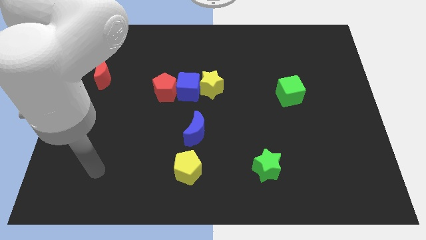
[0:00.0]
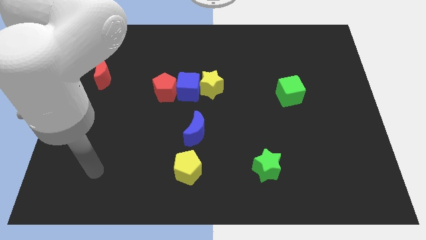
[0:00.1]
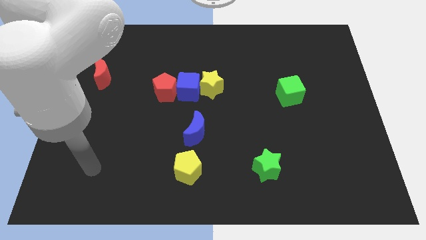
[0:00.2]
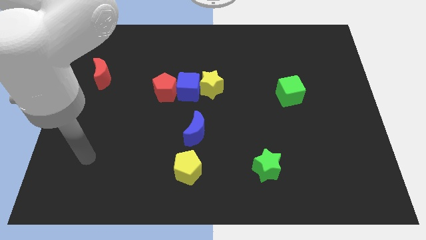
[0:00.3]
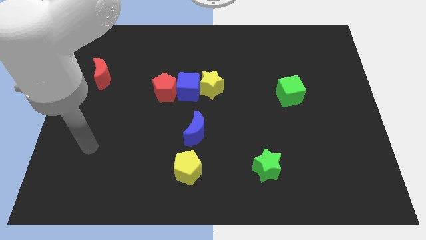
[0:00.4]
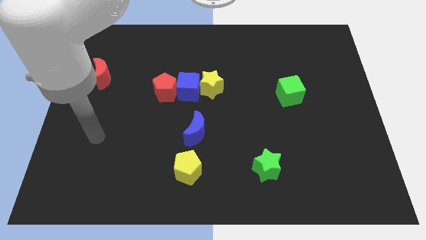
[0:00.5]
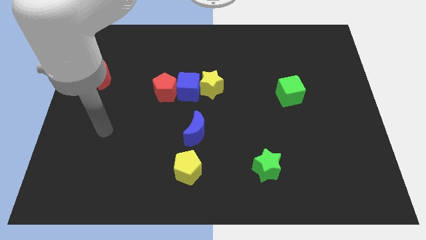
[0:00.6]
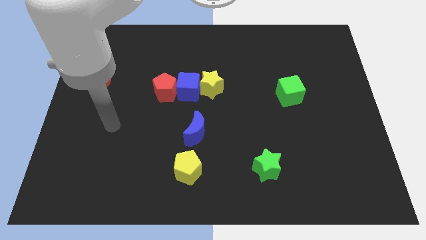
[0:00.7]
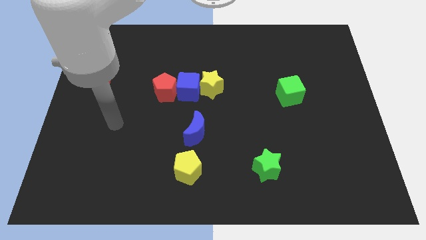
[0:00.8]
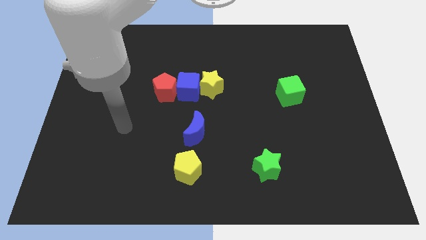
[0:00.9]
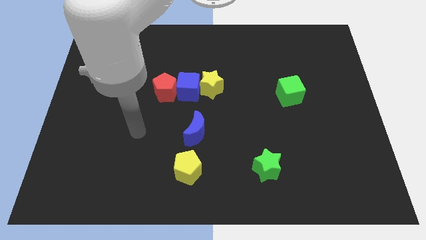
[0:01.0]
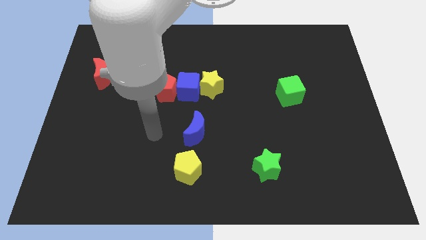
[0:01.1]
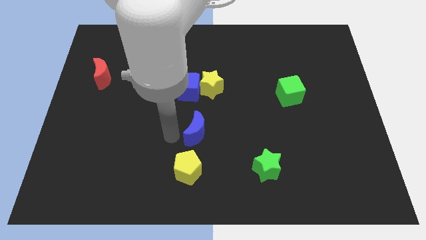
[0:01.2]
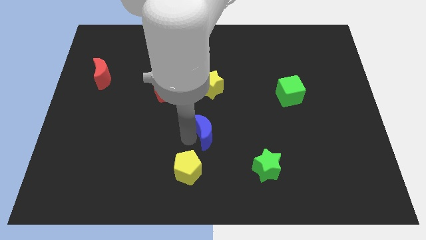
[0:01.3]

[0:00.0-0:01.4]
place the arm to the left of the blue moon

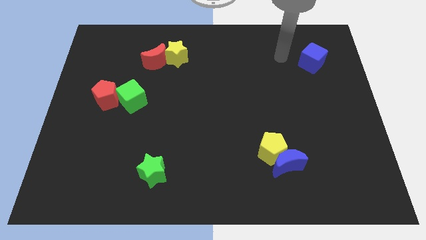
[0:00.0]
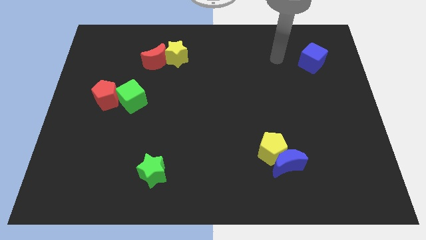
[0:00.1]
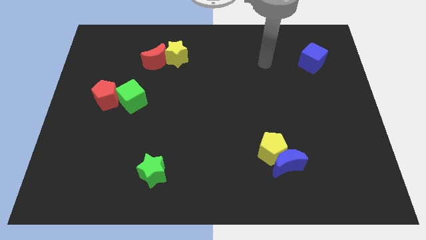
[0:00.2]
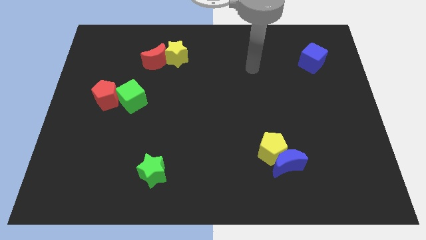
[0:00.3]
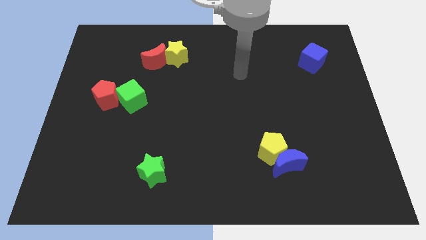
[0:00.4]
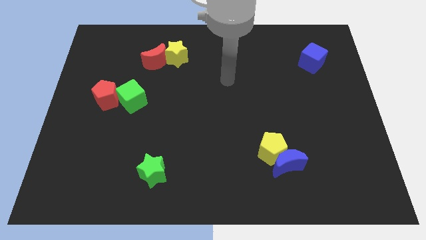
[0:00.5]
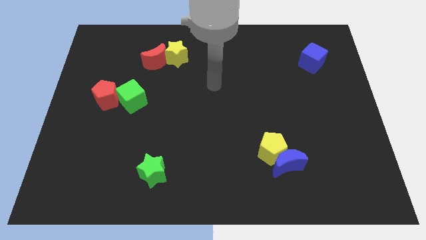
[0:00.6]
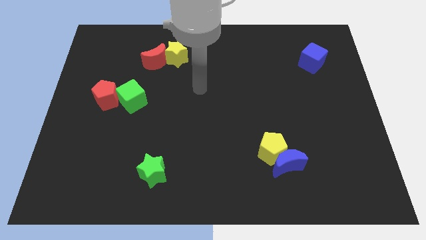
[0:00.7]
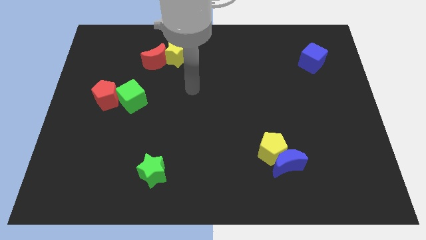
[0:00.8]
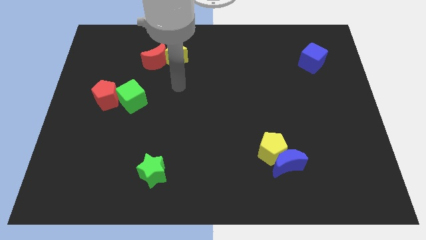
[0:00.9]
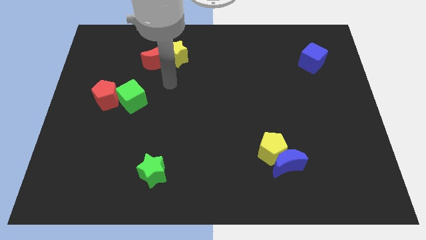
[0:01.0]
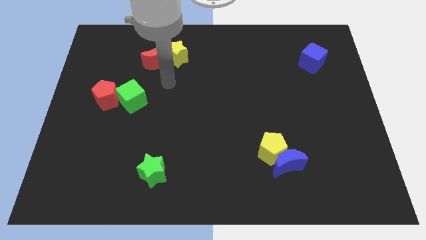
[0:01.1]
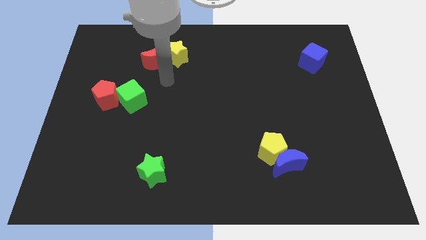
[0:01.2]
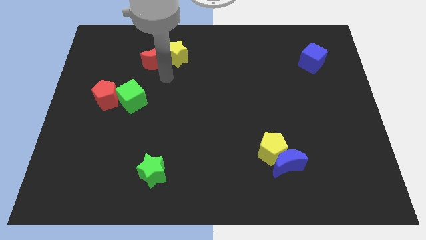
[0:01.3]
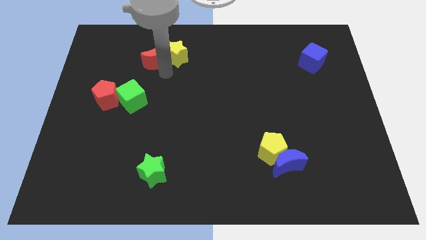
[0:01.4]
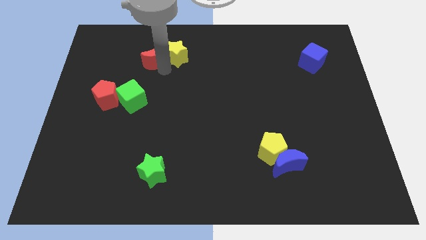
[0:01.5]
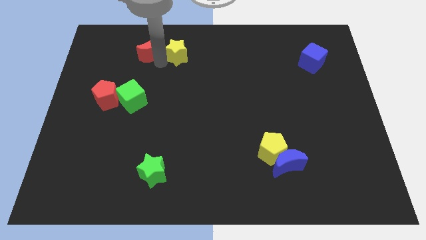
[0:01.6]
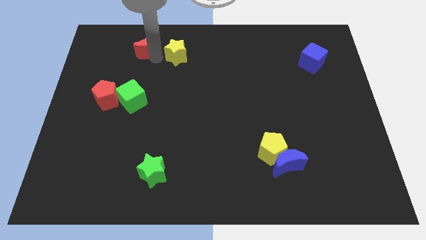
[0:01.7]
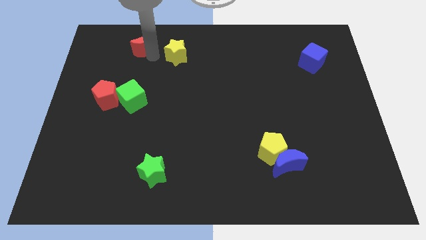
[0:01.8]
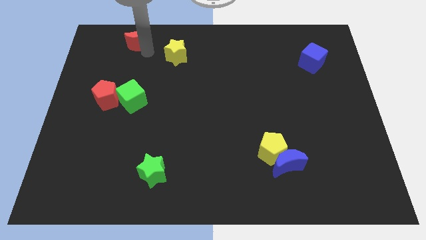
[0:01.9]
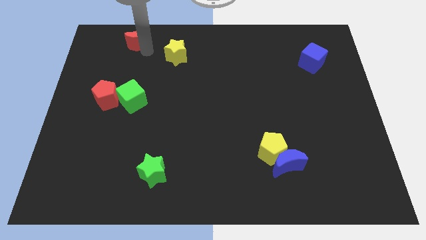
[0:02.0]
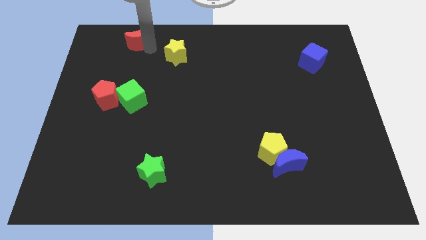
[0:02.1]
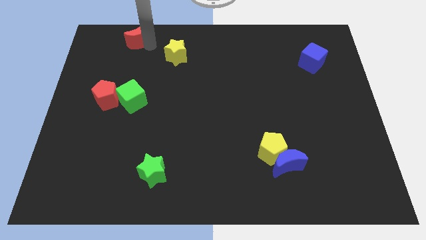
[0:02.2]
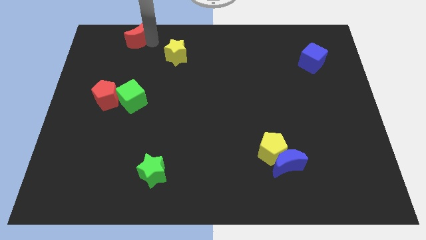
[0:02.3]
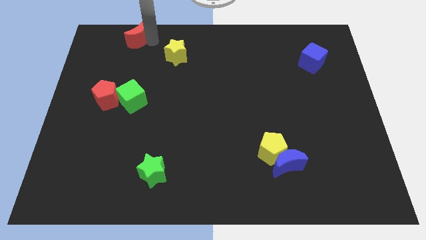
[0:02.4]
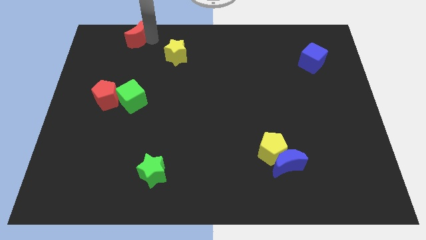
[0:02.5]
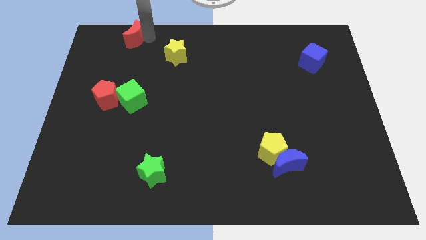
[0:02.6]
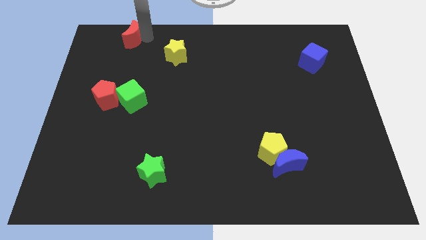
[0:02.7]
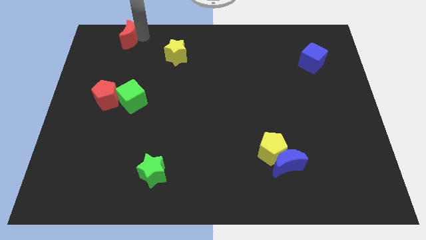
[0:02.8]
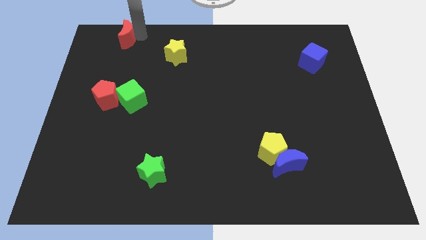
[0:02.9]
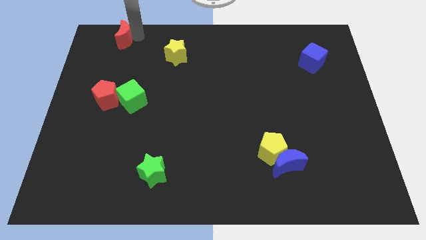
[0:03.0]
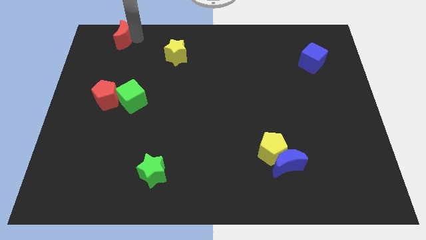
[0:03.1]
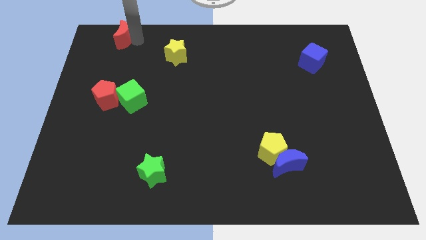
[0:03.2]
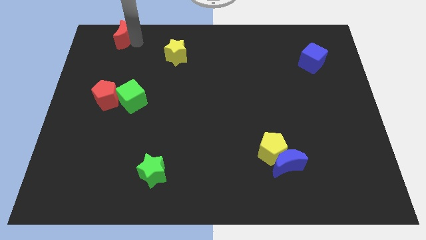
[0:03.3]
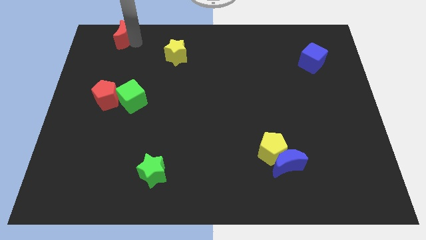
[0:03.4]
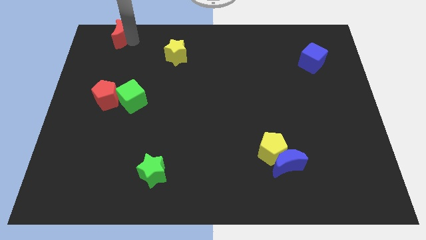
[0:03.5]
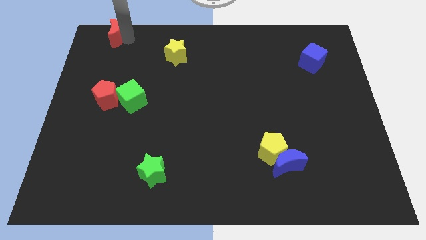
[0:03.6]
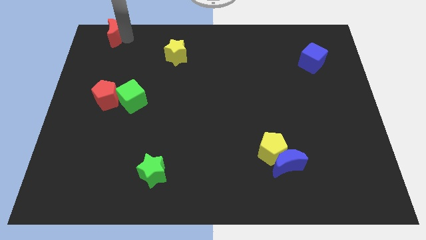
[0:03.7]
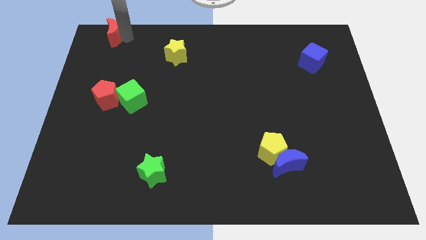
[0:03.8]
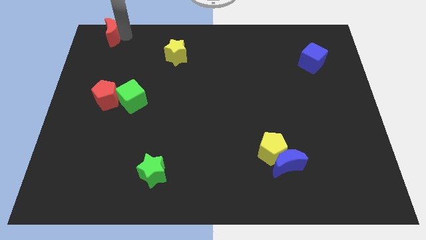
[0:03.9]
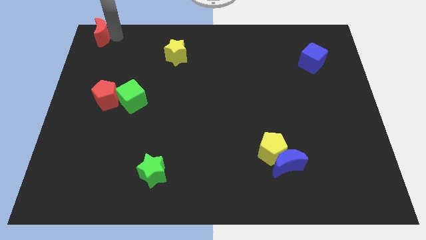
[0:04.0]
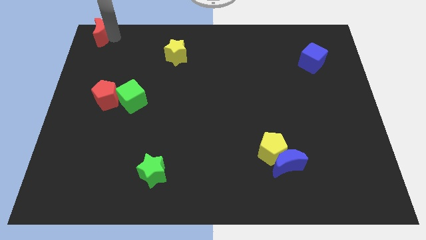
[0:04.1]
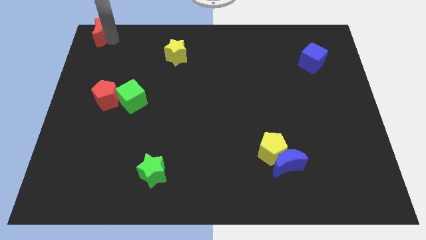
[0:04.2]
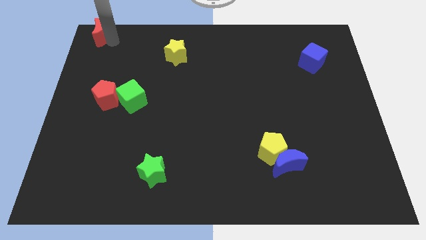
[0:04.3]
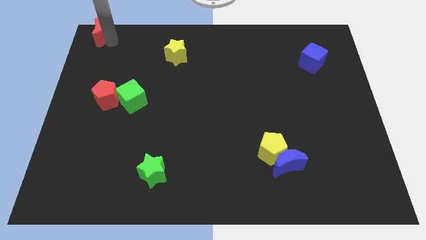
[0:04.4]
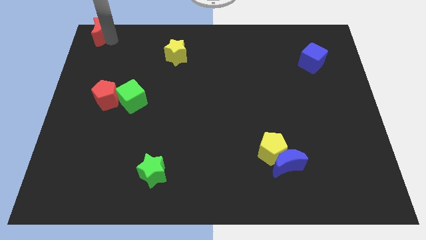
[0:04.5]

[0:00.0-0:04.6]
place the red crescent towards top left corner

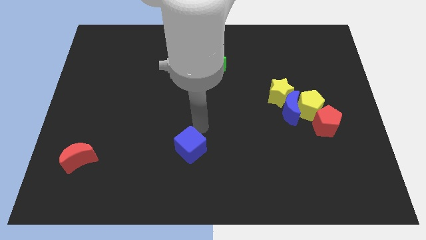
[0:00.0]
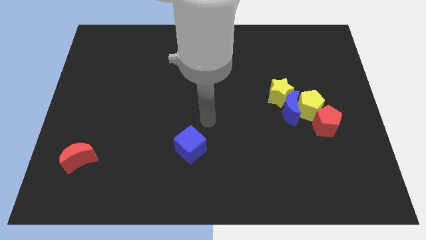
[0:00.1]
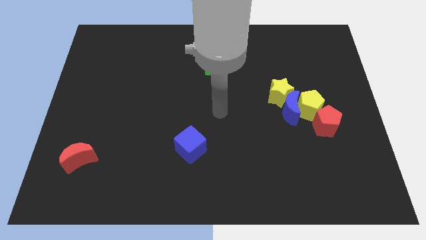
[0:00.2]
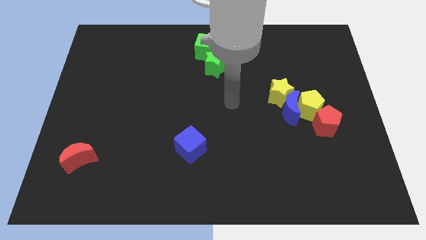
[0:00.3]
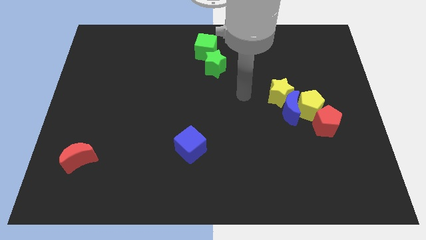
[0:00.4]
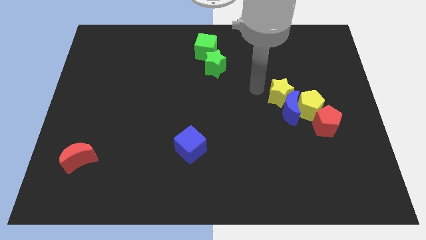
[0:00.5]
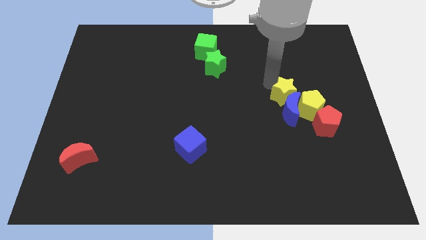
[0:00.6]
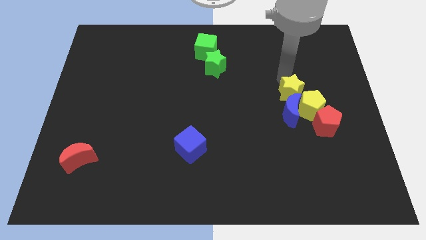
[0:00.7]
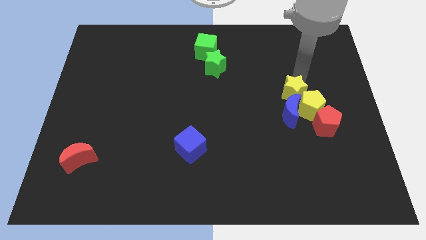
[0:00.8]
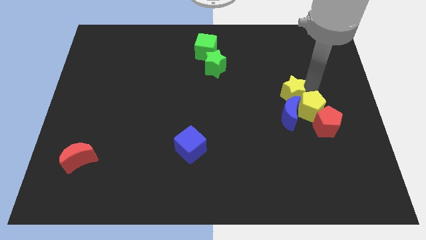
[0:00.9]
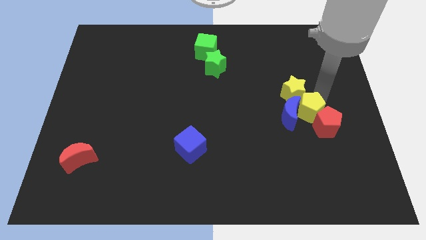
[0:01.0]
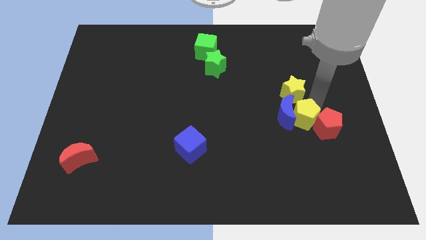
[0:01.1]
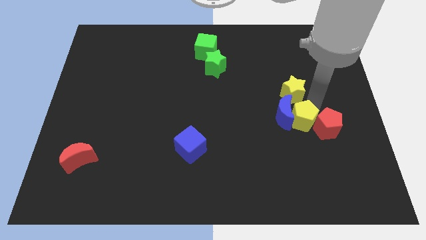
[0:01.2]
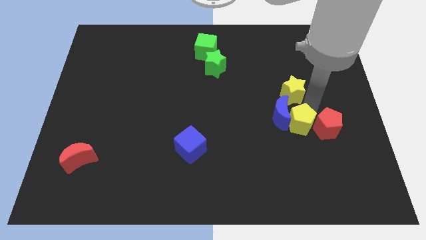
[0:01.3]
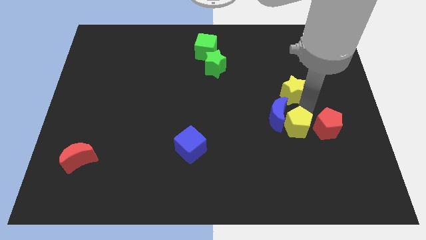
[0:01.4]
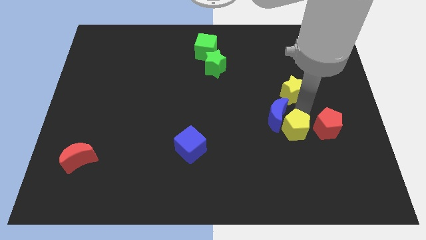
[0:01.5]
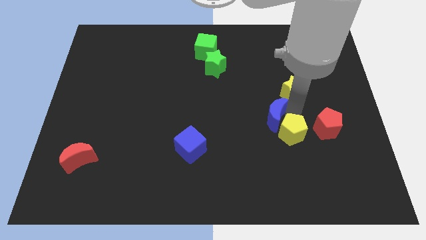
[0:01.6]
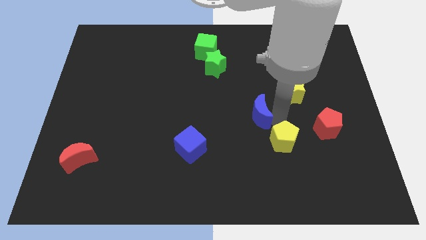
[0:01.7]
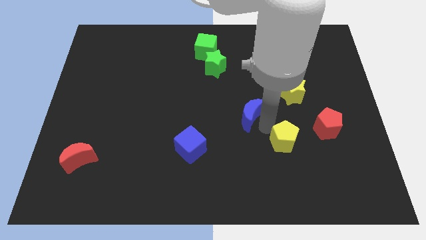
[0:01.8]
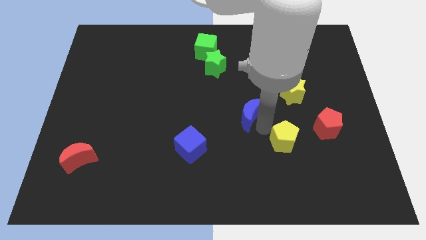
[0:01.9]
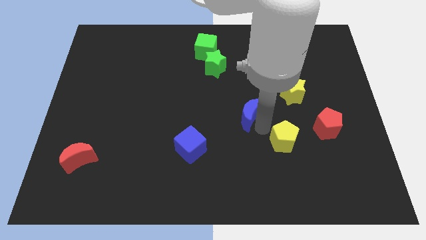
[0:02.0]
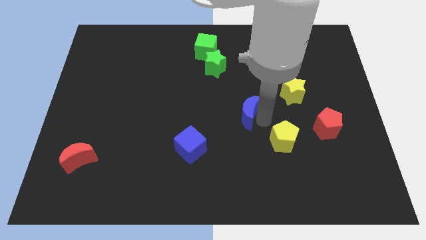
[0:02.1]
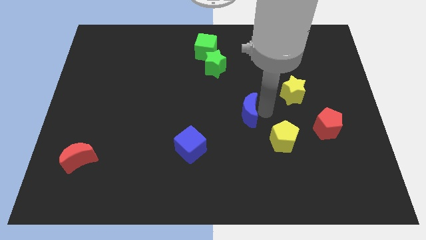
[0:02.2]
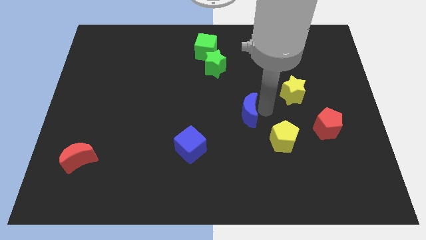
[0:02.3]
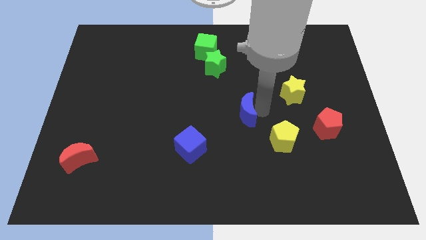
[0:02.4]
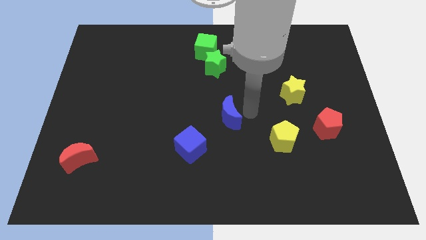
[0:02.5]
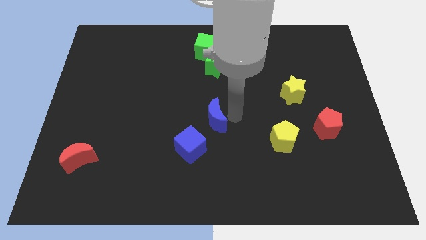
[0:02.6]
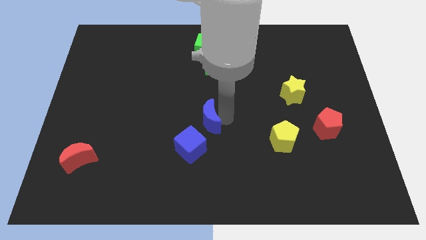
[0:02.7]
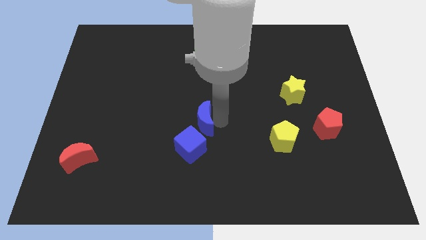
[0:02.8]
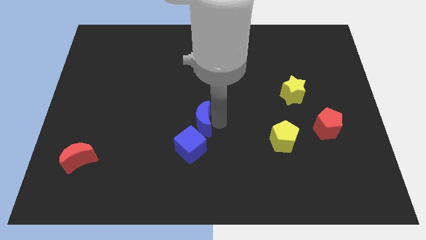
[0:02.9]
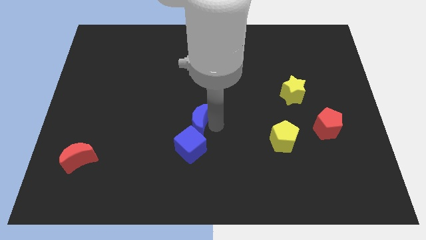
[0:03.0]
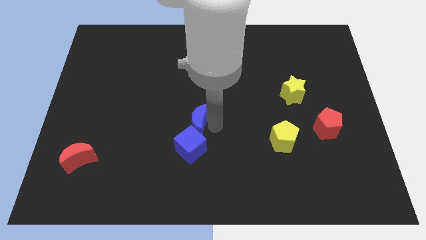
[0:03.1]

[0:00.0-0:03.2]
separate the blue cube from the group of blocks
